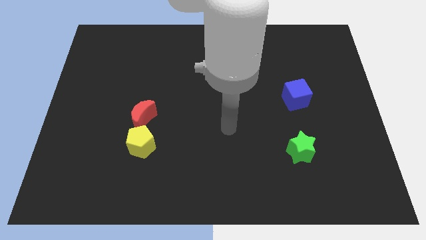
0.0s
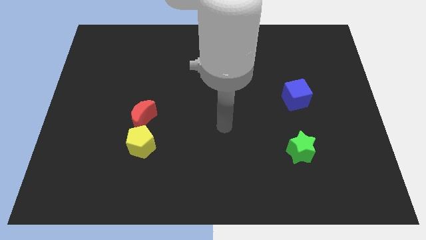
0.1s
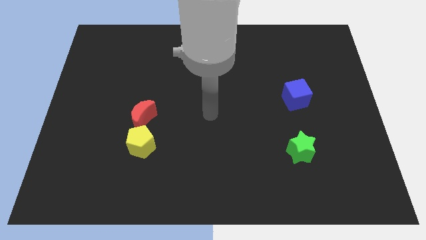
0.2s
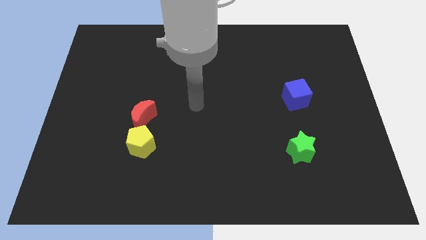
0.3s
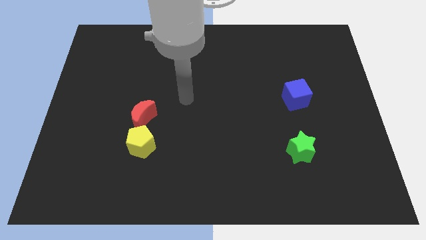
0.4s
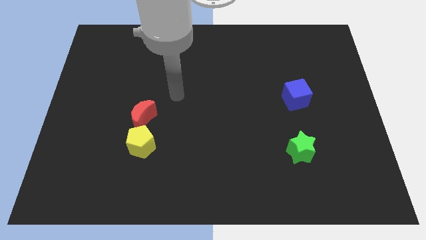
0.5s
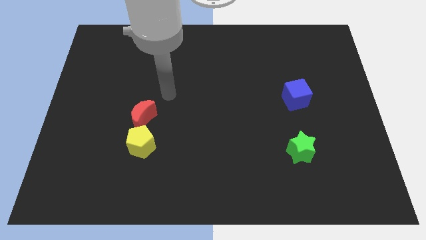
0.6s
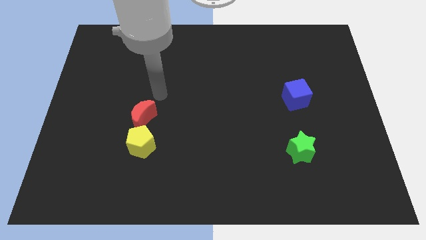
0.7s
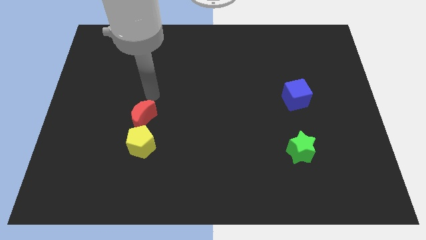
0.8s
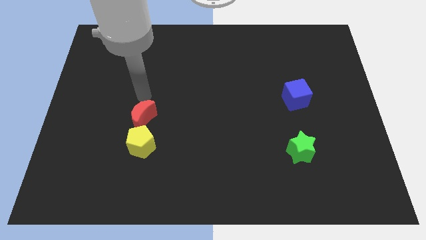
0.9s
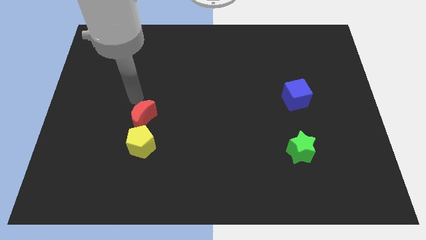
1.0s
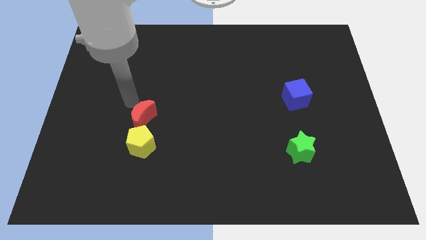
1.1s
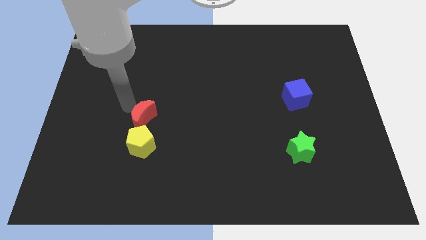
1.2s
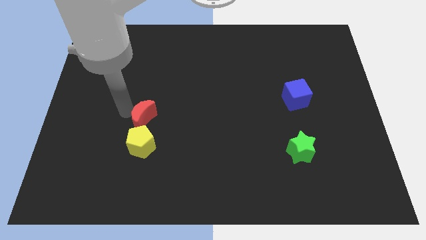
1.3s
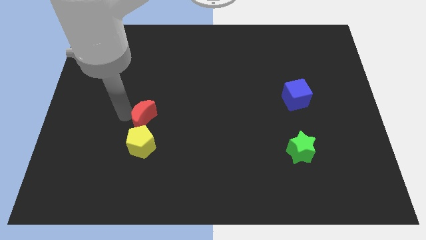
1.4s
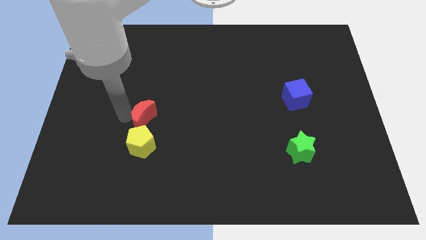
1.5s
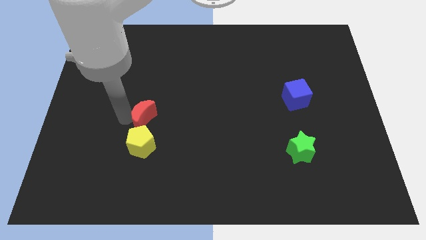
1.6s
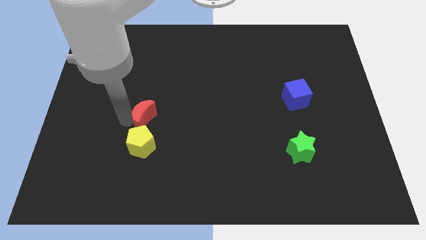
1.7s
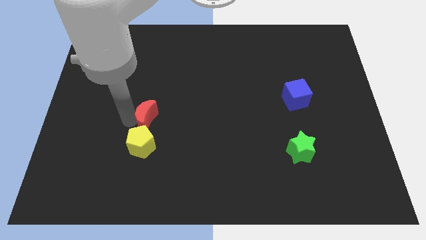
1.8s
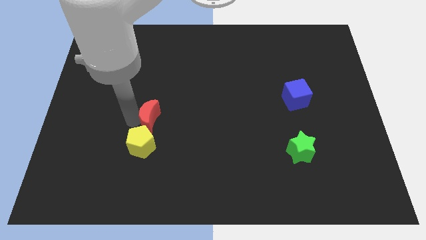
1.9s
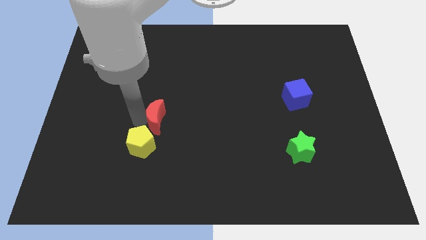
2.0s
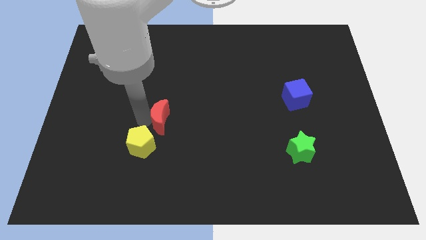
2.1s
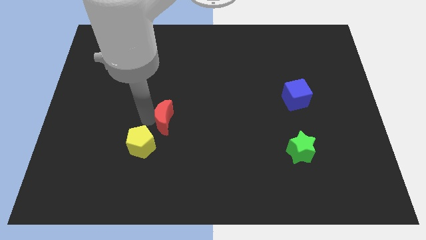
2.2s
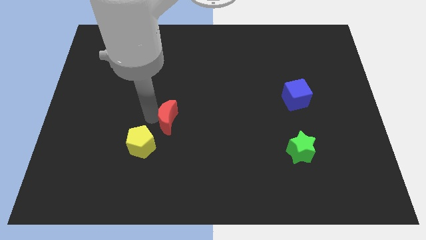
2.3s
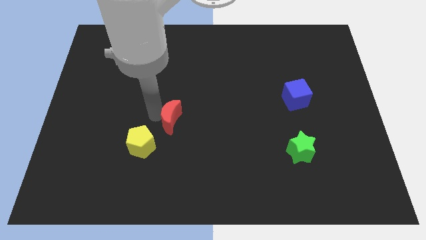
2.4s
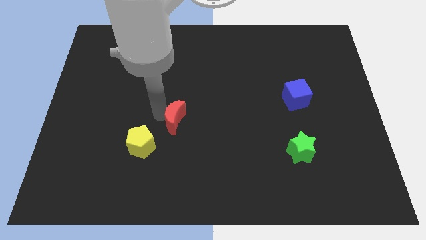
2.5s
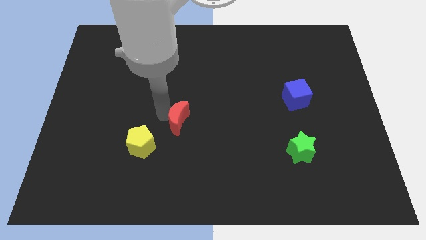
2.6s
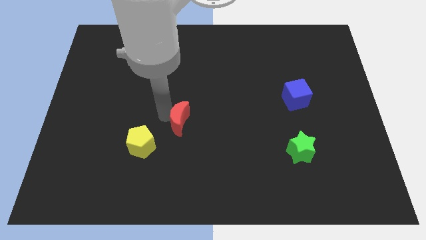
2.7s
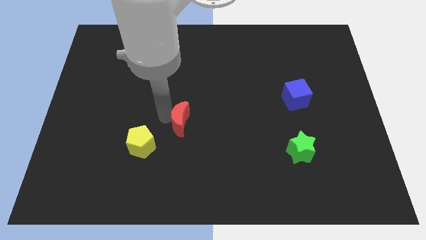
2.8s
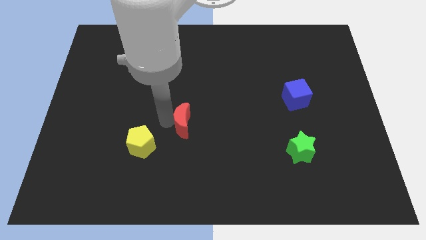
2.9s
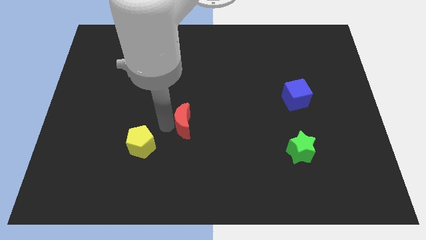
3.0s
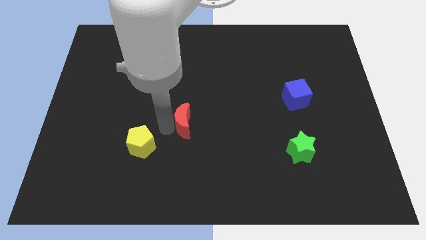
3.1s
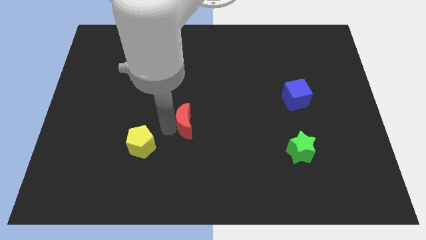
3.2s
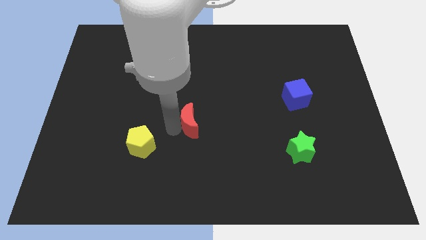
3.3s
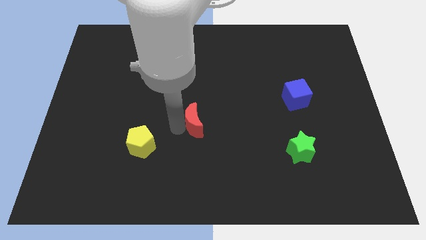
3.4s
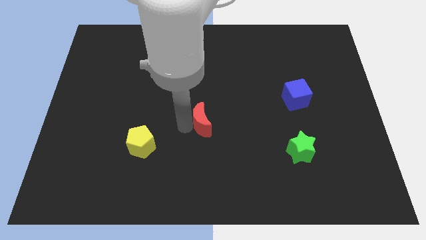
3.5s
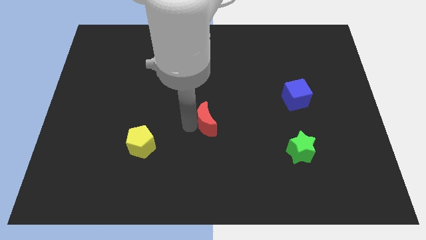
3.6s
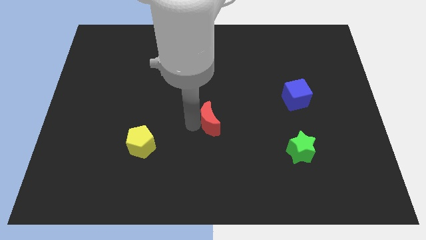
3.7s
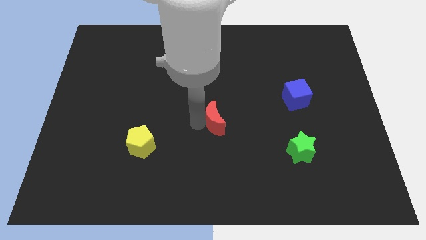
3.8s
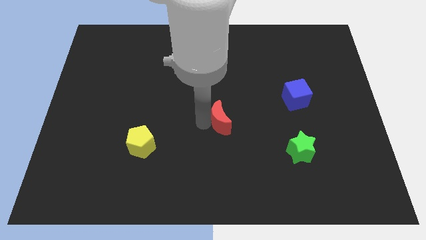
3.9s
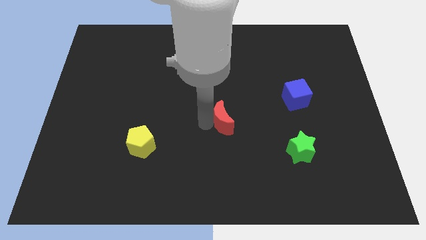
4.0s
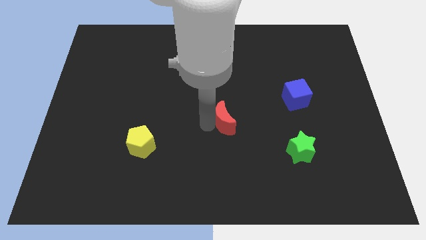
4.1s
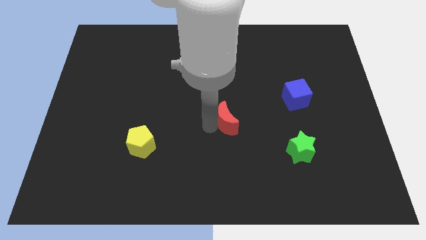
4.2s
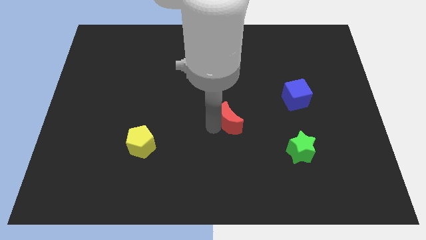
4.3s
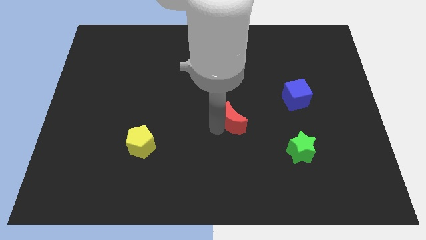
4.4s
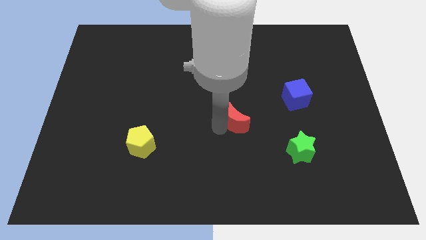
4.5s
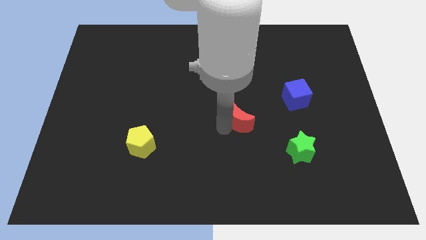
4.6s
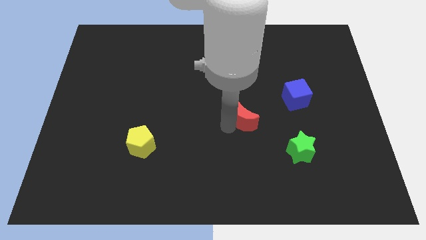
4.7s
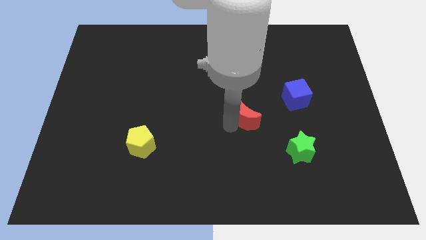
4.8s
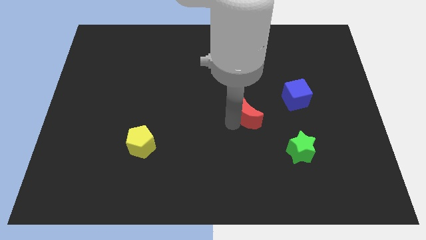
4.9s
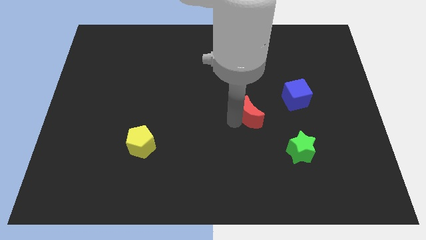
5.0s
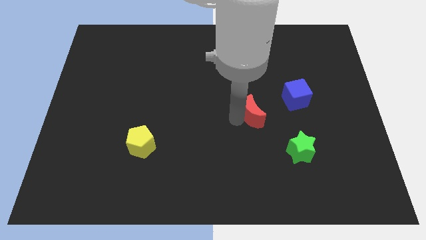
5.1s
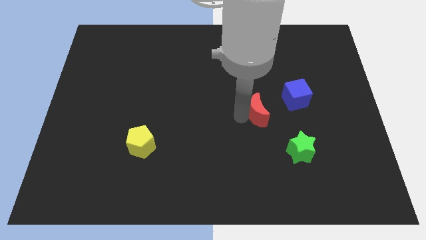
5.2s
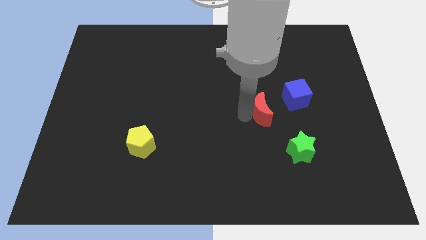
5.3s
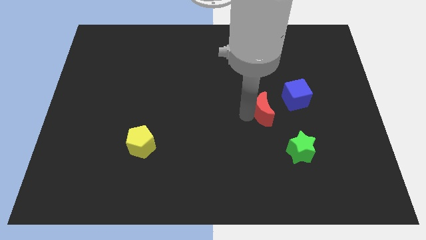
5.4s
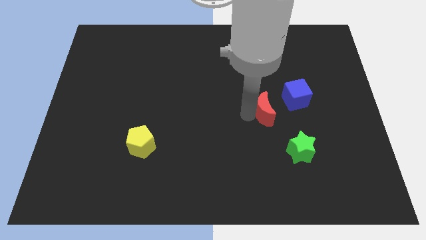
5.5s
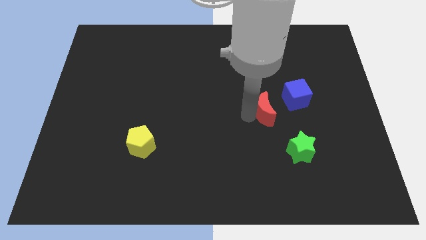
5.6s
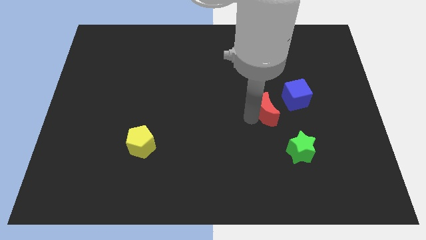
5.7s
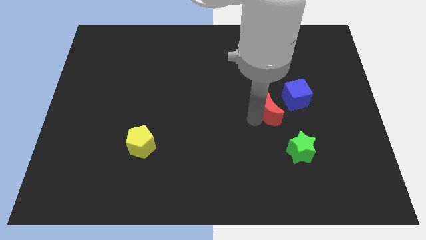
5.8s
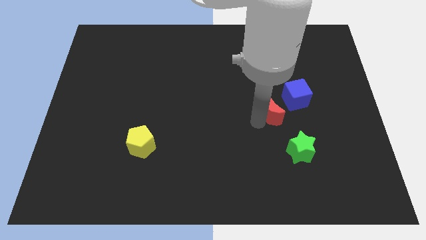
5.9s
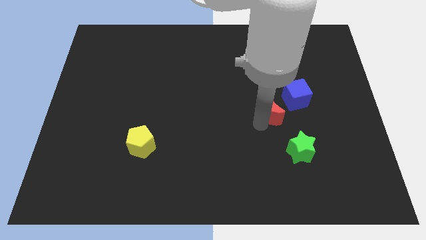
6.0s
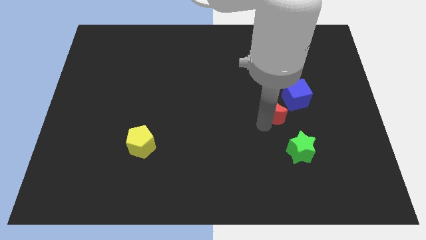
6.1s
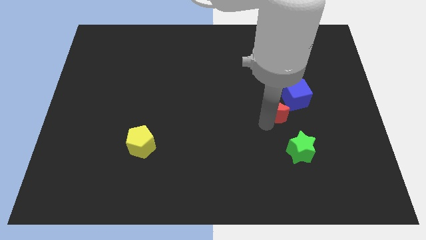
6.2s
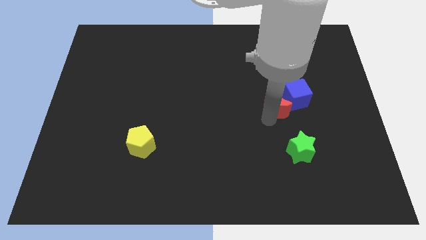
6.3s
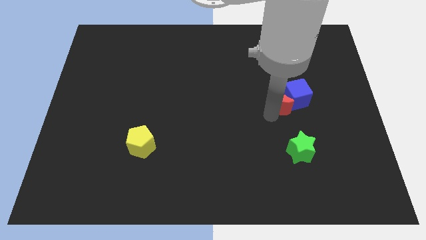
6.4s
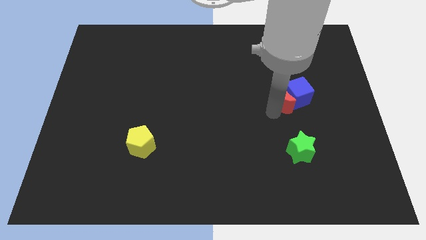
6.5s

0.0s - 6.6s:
put the red block towards the blue cube

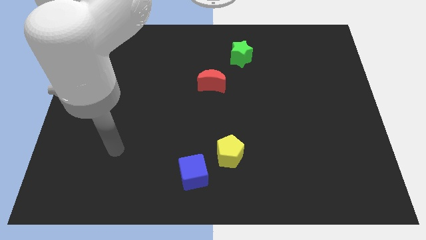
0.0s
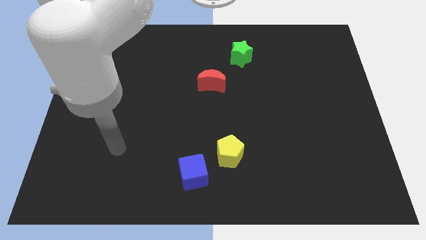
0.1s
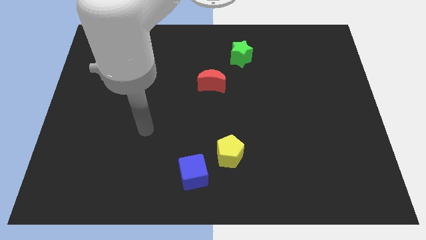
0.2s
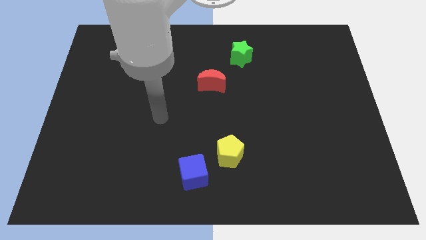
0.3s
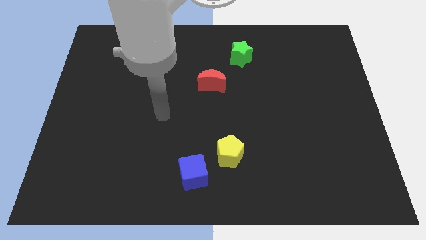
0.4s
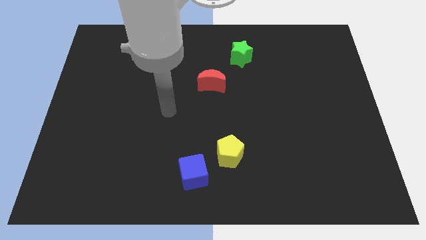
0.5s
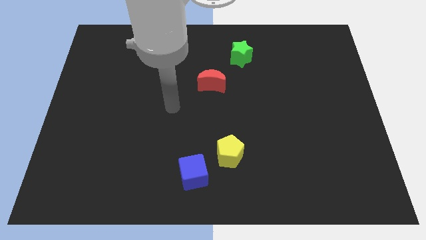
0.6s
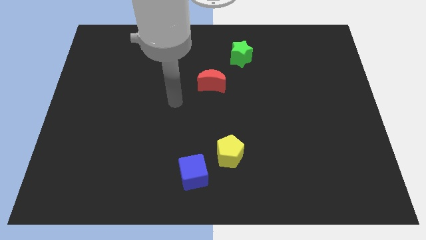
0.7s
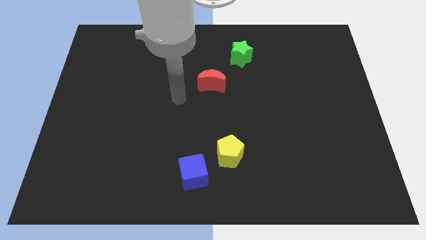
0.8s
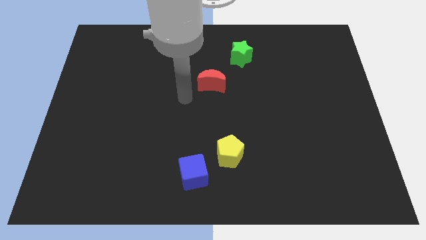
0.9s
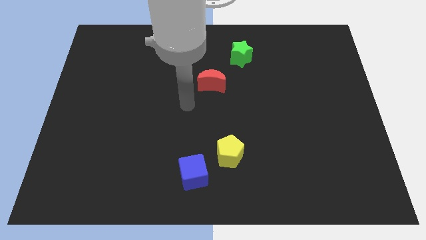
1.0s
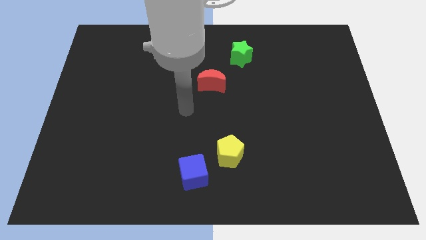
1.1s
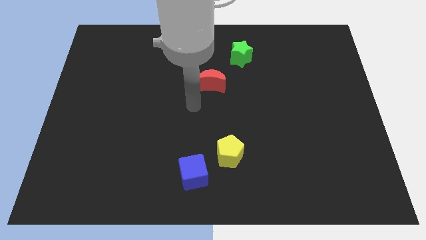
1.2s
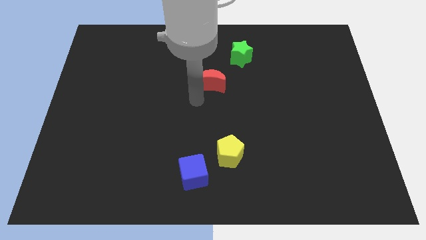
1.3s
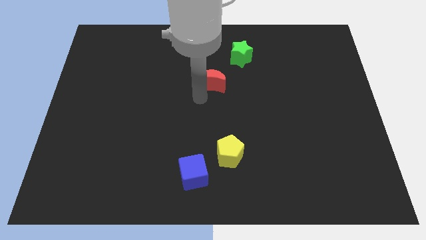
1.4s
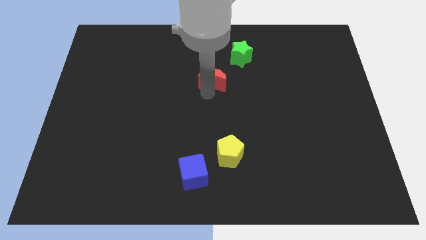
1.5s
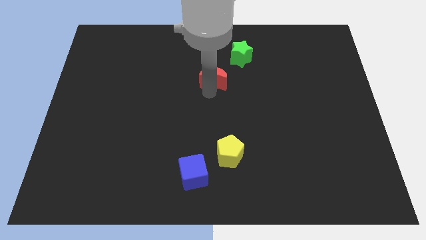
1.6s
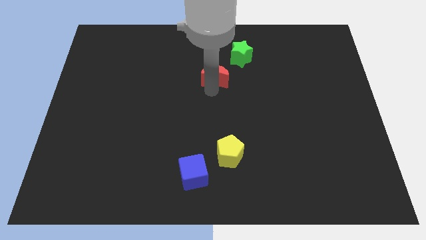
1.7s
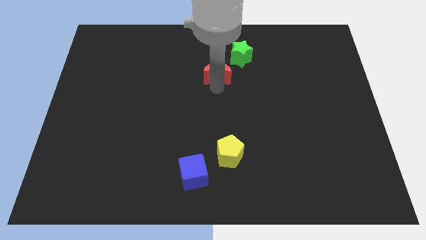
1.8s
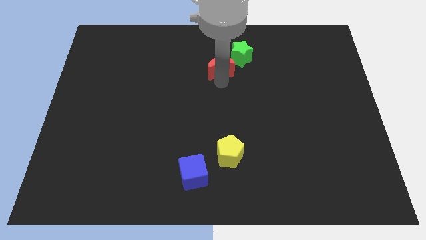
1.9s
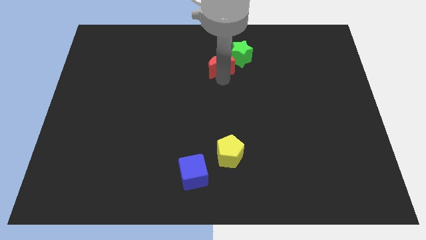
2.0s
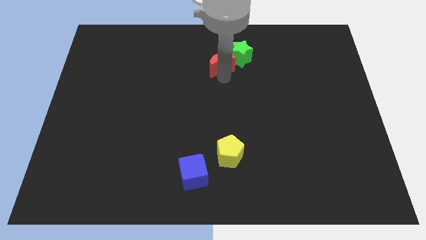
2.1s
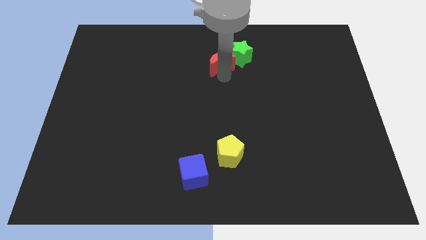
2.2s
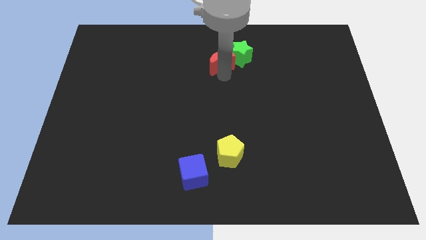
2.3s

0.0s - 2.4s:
move the red block close to the green star
